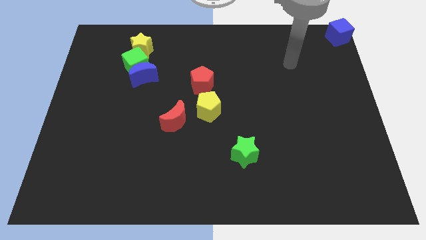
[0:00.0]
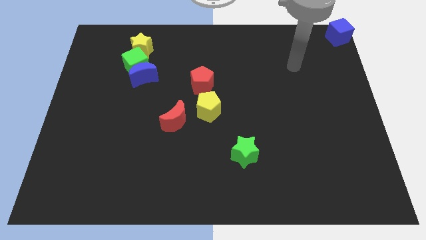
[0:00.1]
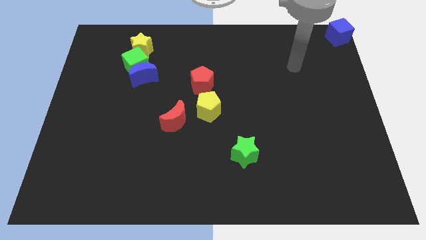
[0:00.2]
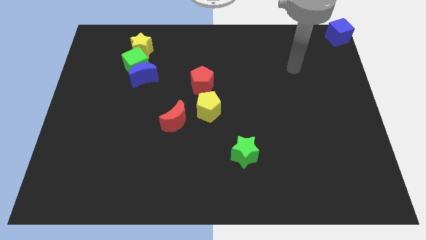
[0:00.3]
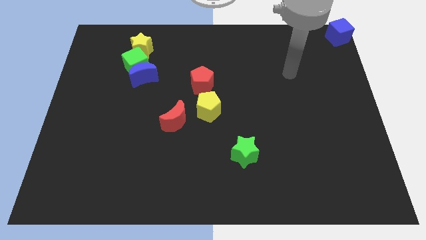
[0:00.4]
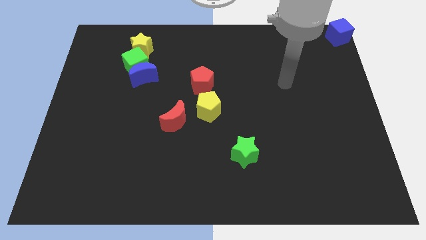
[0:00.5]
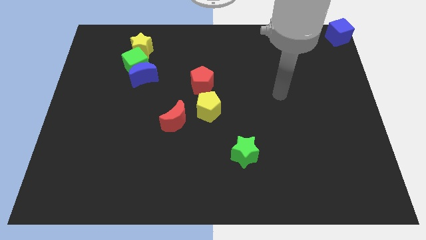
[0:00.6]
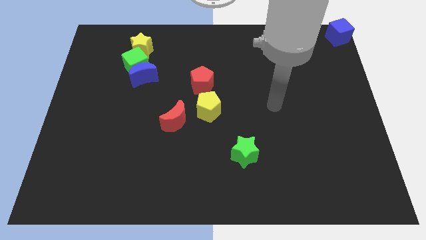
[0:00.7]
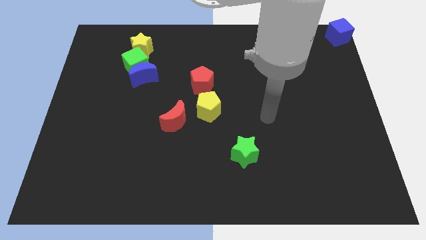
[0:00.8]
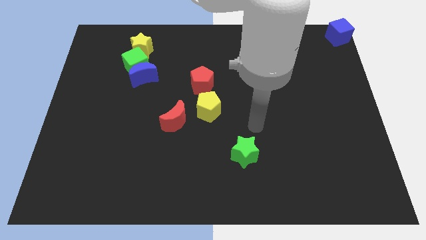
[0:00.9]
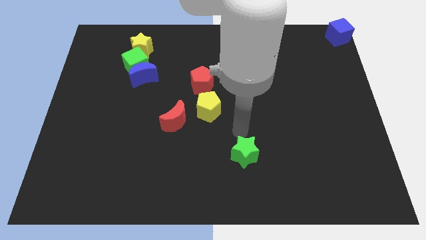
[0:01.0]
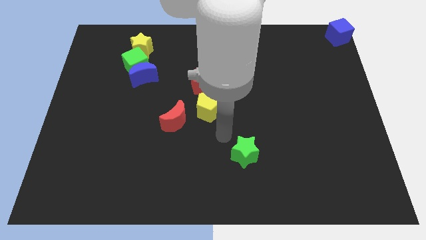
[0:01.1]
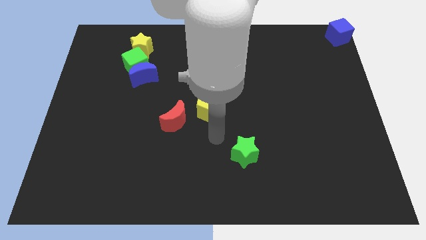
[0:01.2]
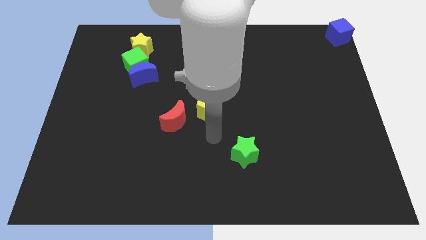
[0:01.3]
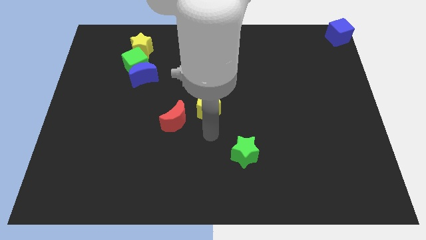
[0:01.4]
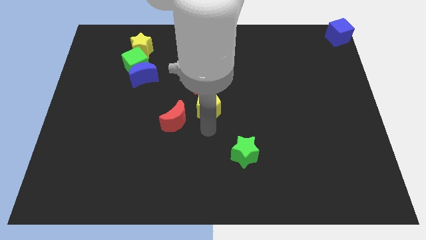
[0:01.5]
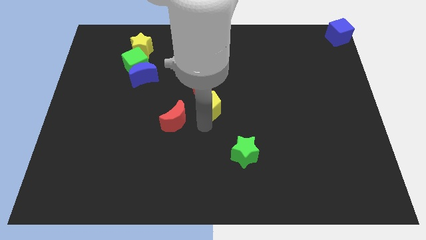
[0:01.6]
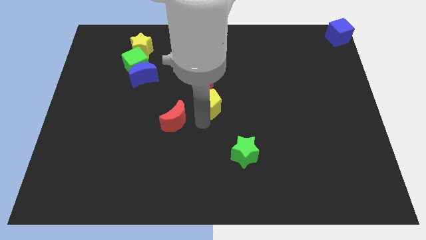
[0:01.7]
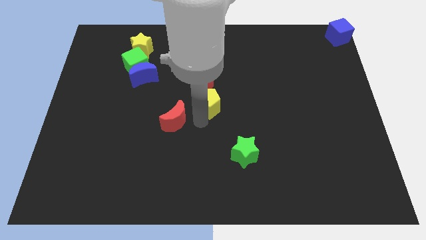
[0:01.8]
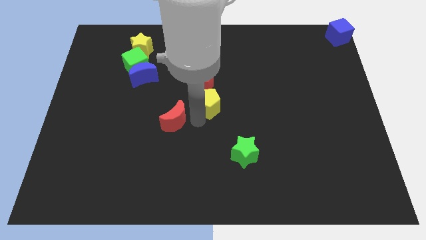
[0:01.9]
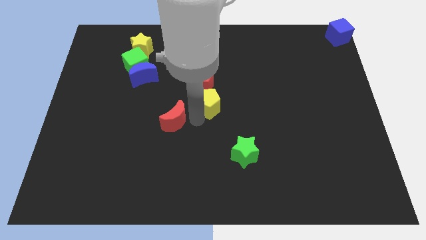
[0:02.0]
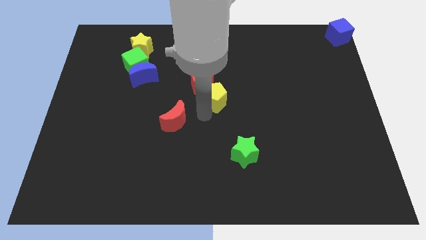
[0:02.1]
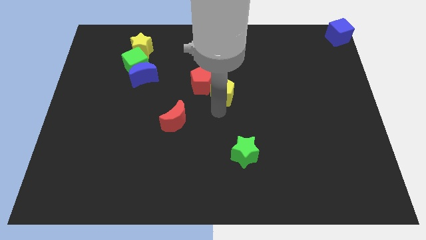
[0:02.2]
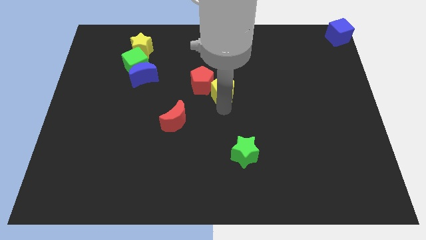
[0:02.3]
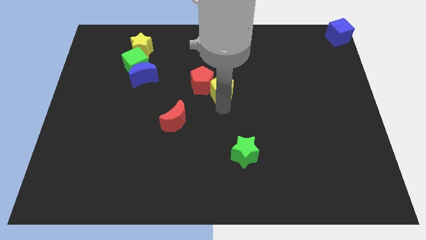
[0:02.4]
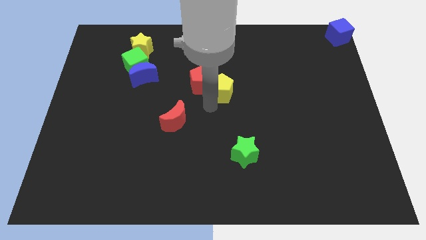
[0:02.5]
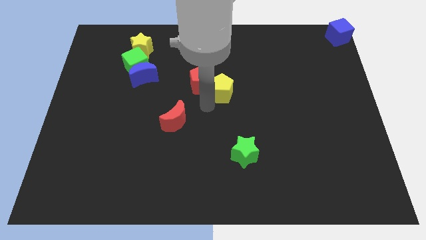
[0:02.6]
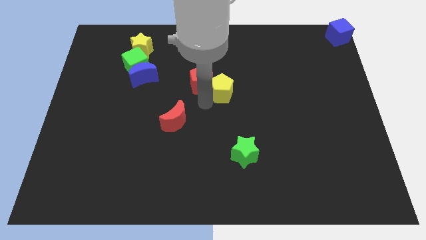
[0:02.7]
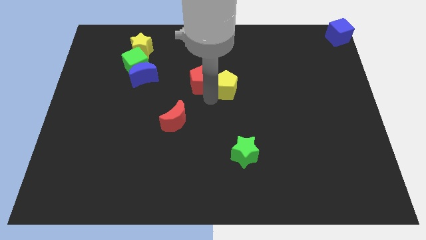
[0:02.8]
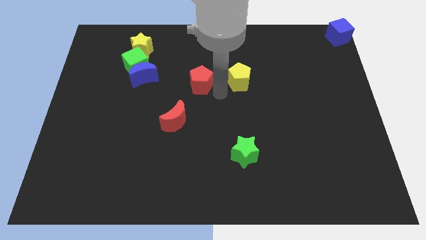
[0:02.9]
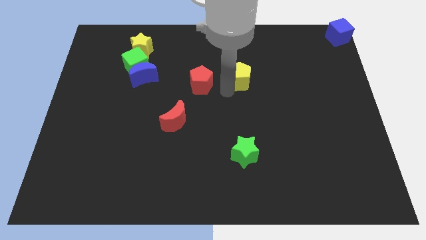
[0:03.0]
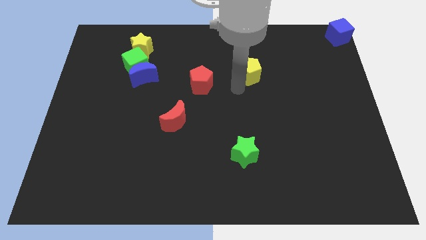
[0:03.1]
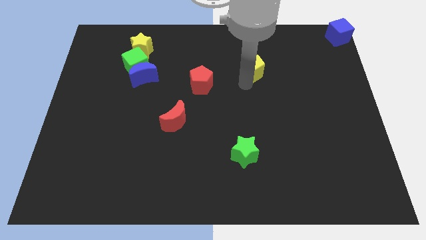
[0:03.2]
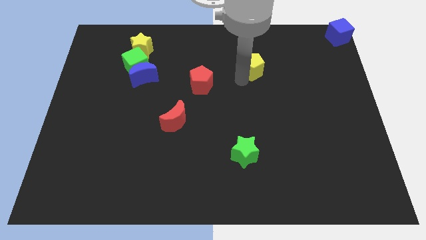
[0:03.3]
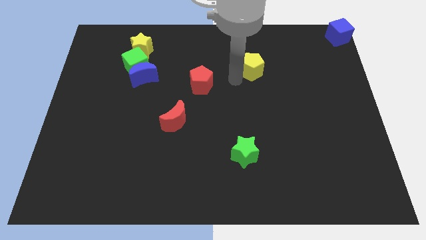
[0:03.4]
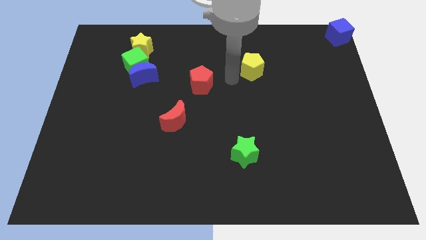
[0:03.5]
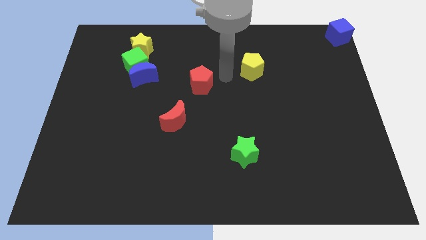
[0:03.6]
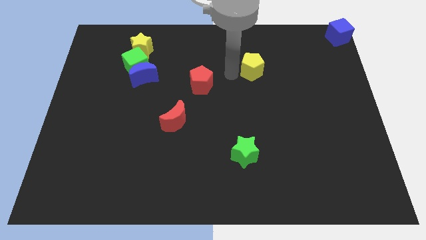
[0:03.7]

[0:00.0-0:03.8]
move the yellow pentagon to the top right of the red pentagon

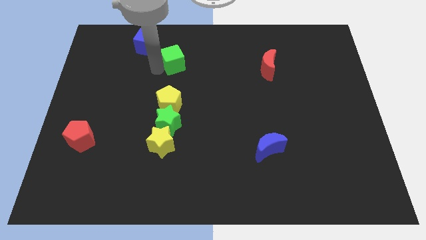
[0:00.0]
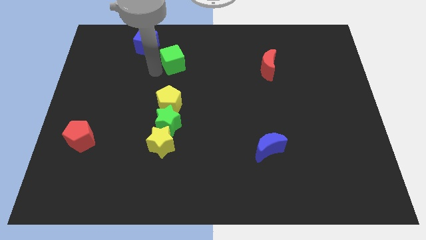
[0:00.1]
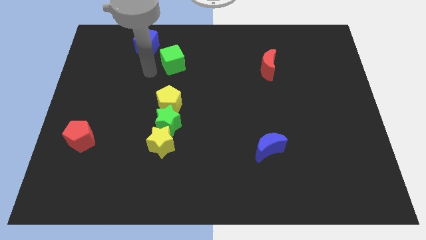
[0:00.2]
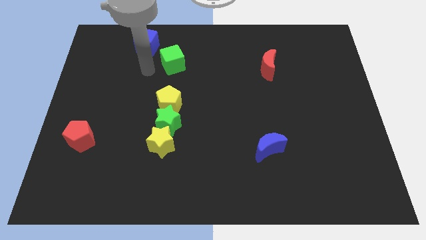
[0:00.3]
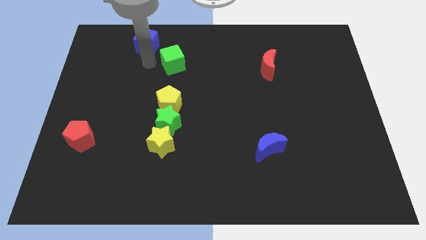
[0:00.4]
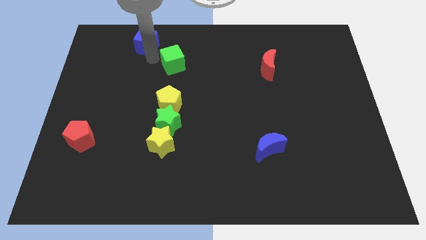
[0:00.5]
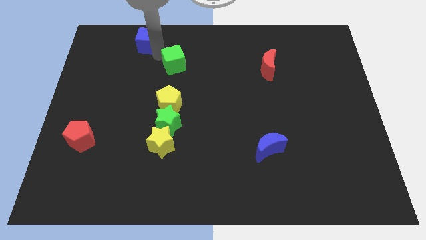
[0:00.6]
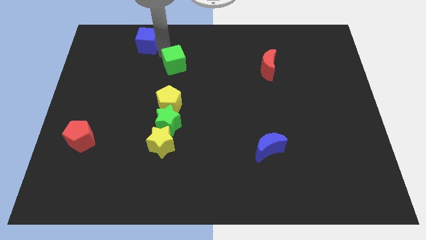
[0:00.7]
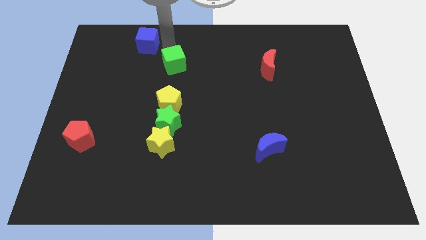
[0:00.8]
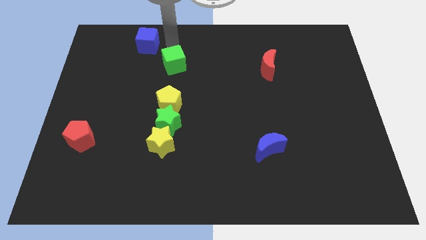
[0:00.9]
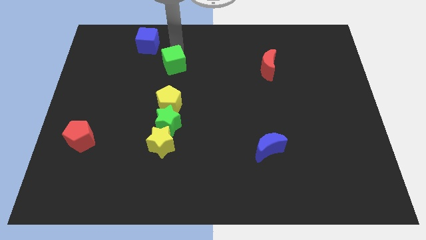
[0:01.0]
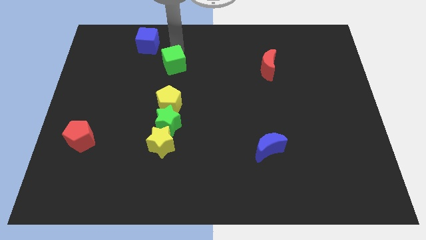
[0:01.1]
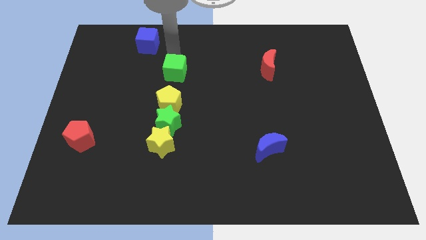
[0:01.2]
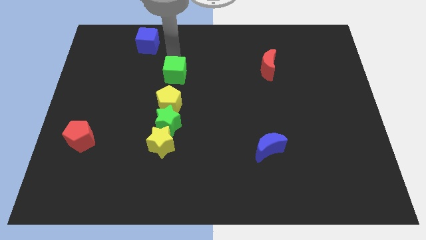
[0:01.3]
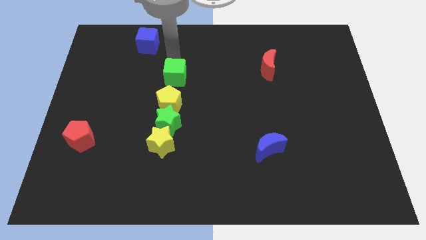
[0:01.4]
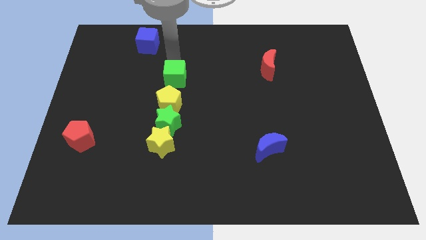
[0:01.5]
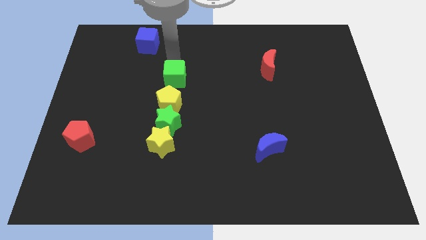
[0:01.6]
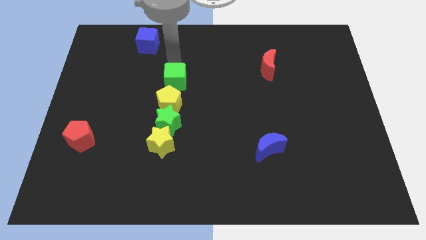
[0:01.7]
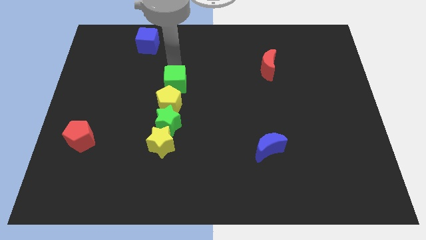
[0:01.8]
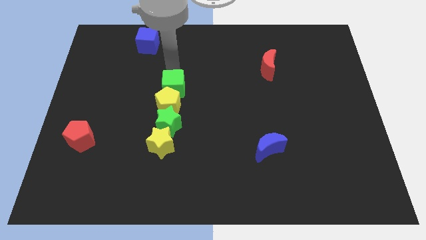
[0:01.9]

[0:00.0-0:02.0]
move green cube close to the top of the yellow pentagon

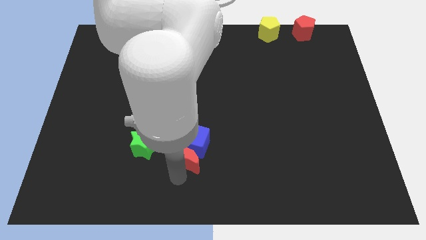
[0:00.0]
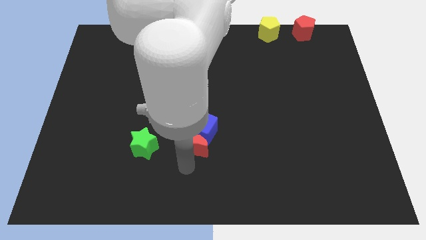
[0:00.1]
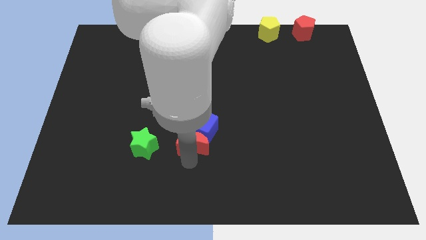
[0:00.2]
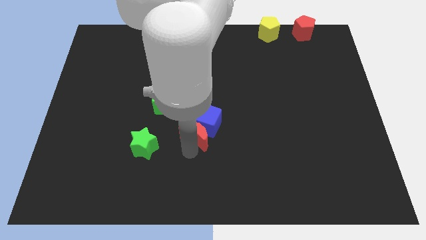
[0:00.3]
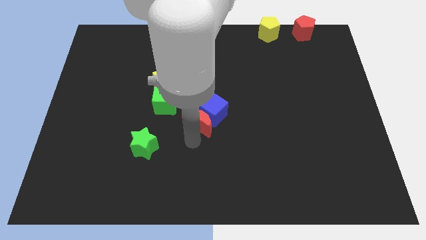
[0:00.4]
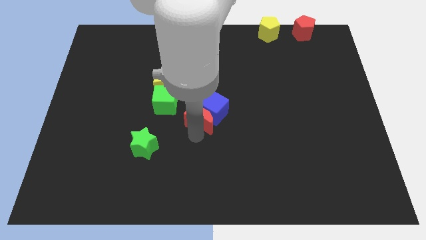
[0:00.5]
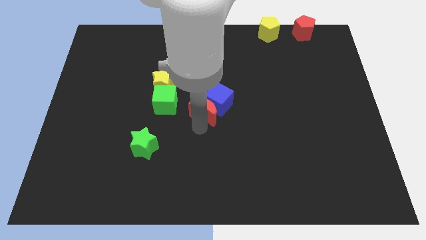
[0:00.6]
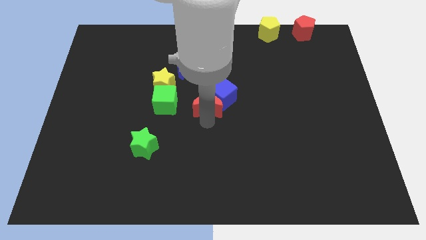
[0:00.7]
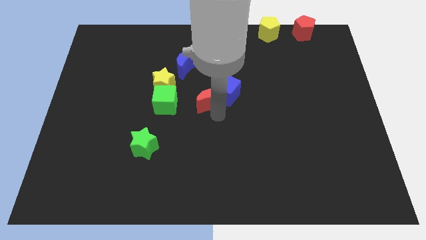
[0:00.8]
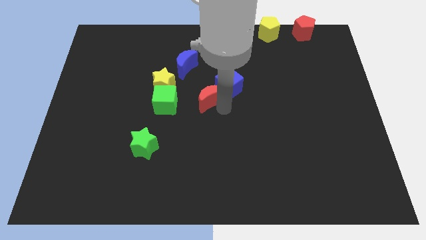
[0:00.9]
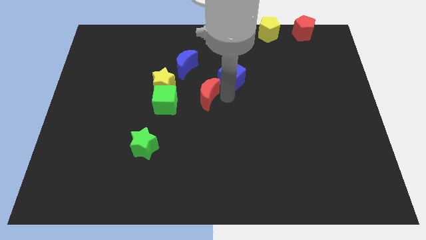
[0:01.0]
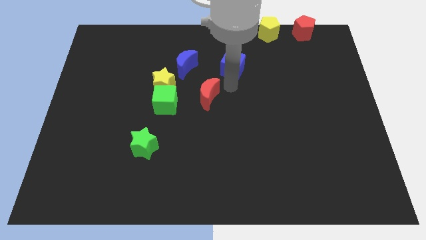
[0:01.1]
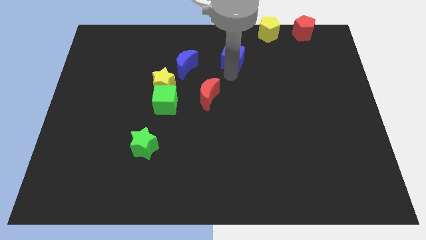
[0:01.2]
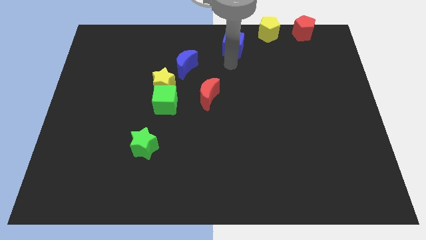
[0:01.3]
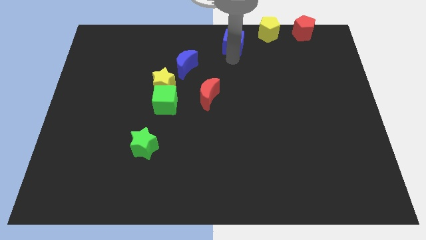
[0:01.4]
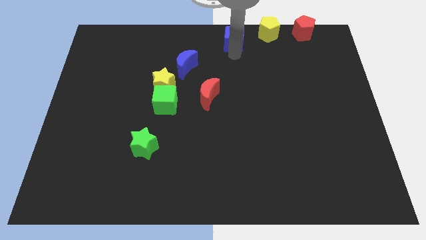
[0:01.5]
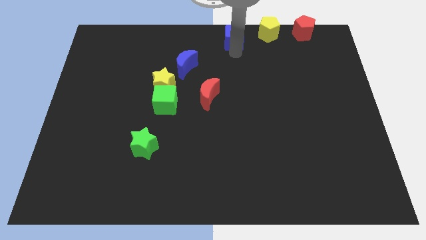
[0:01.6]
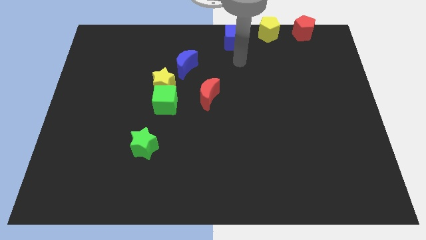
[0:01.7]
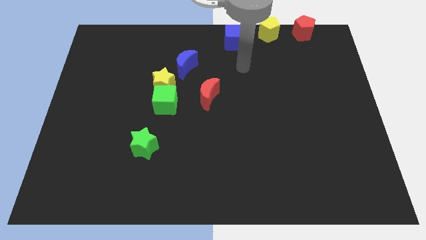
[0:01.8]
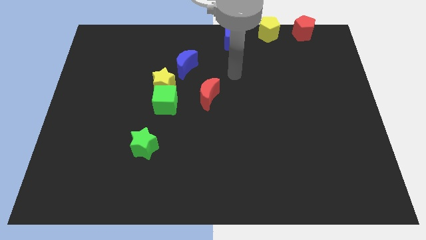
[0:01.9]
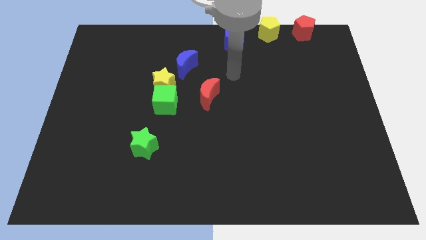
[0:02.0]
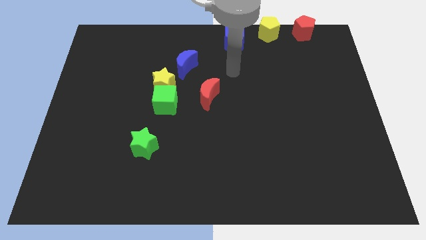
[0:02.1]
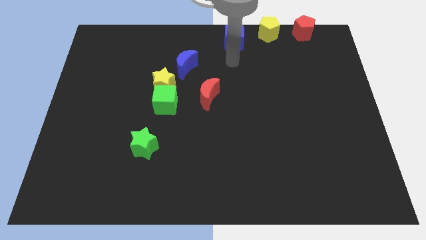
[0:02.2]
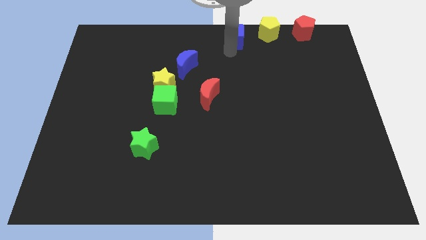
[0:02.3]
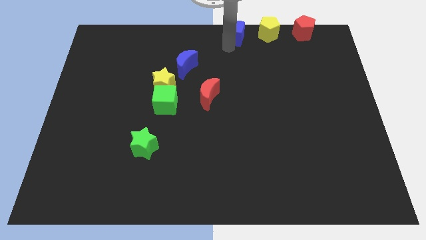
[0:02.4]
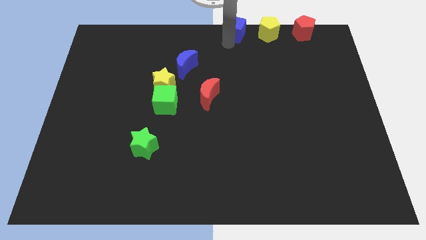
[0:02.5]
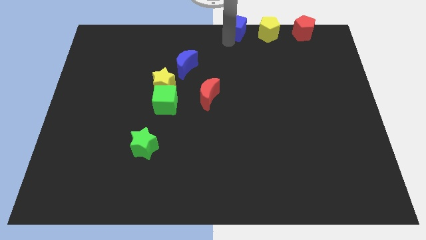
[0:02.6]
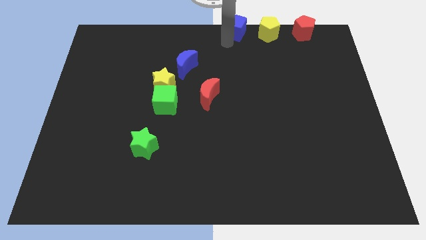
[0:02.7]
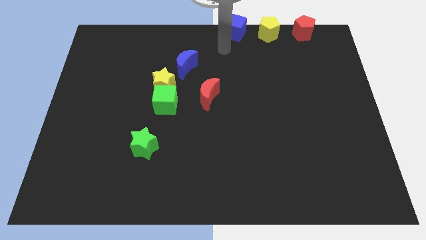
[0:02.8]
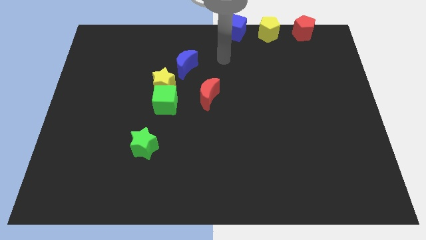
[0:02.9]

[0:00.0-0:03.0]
place blue cube beside yellow pentagon

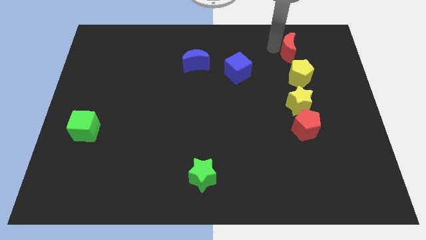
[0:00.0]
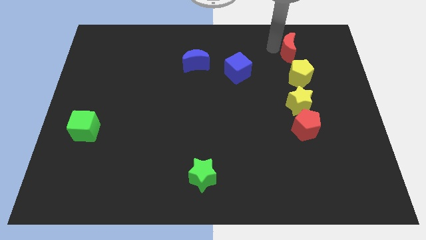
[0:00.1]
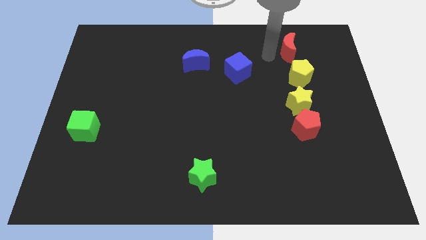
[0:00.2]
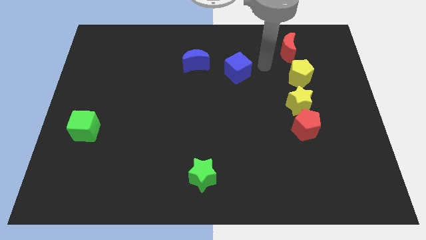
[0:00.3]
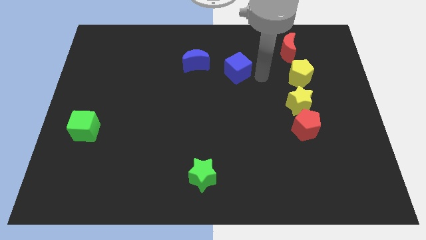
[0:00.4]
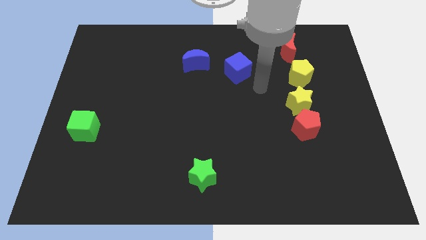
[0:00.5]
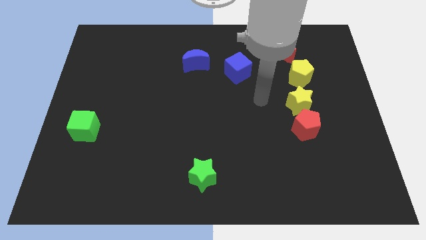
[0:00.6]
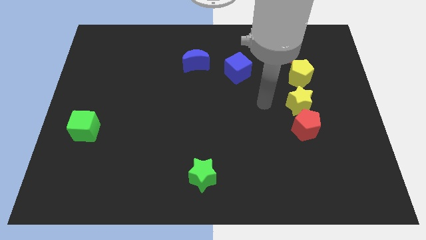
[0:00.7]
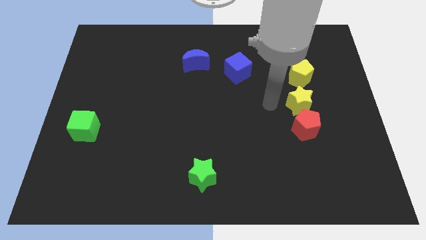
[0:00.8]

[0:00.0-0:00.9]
drag your arm to the center of the board
